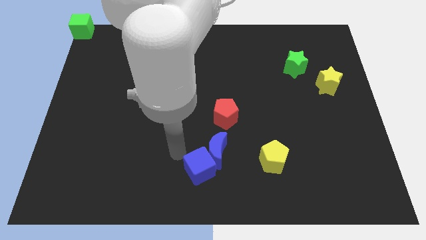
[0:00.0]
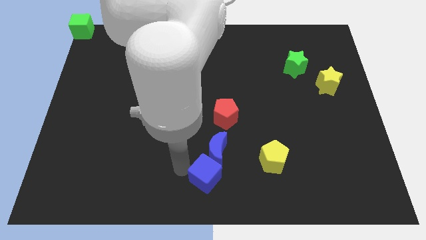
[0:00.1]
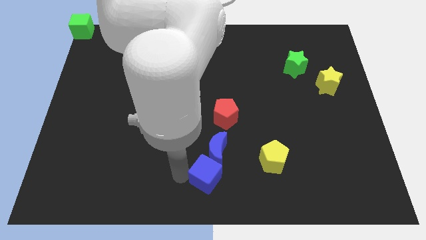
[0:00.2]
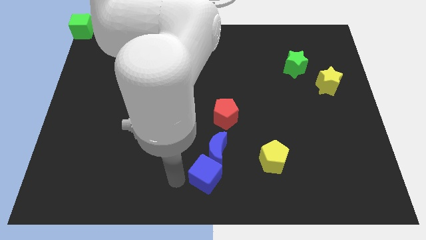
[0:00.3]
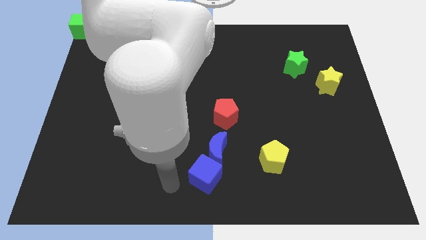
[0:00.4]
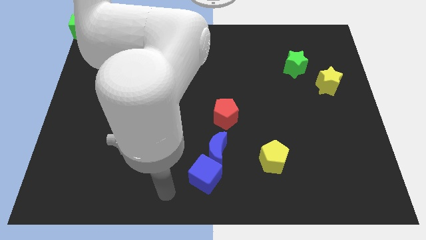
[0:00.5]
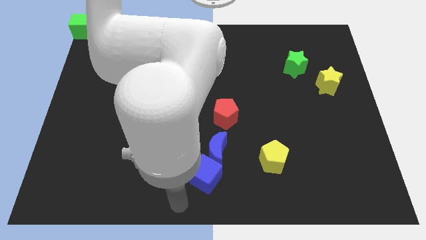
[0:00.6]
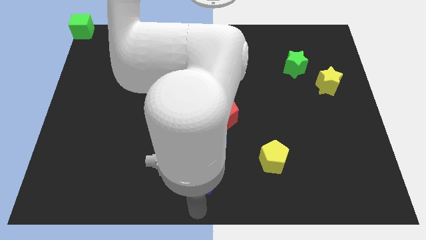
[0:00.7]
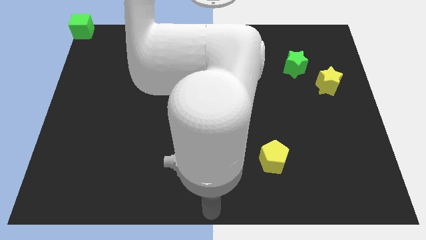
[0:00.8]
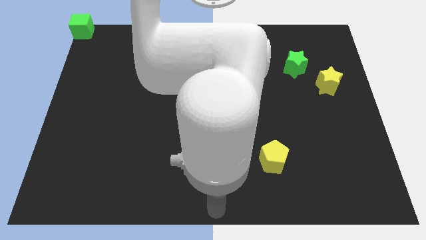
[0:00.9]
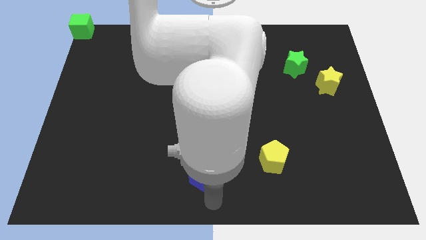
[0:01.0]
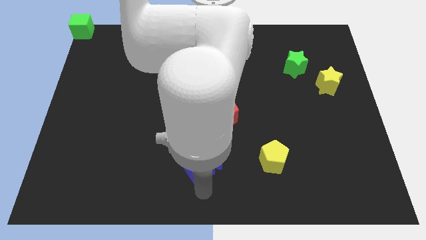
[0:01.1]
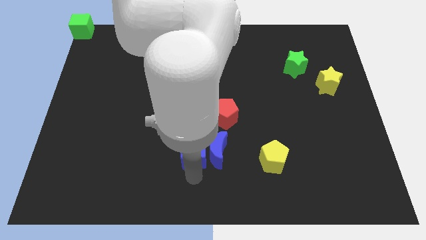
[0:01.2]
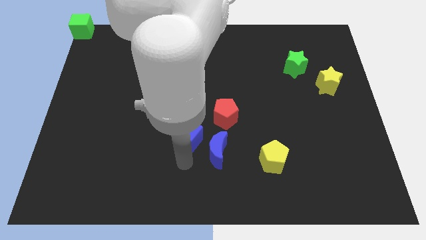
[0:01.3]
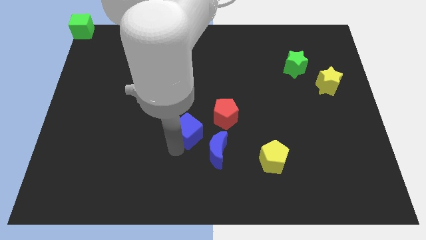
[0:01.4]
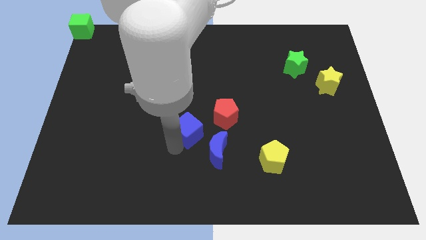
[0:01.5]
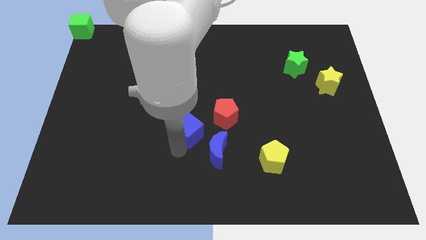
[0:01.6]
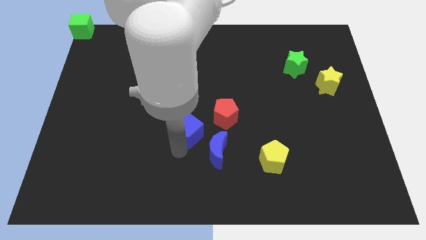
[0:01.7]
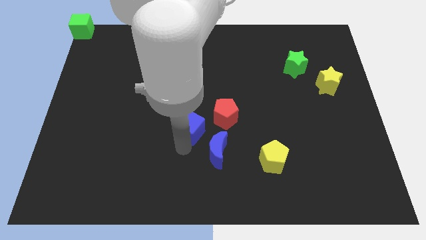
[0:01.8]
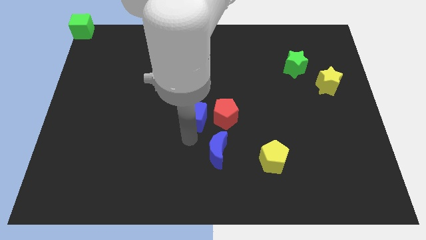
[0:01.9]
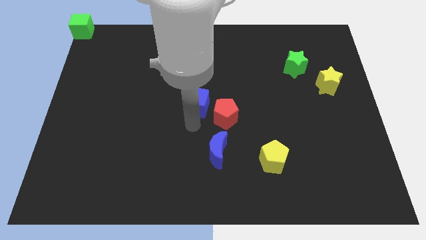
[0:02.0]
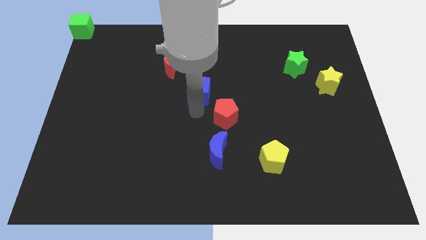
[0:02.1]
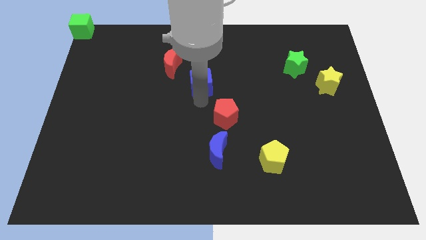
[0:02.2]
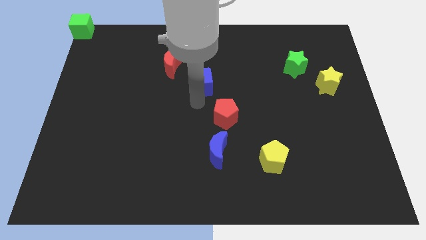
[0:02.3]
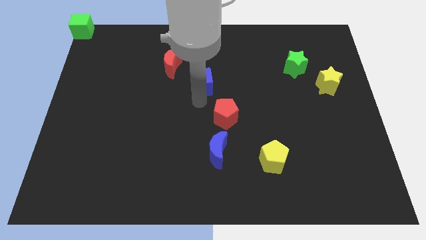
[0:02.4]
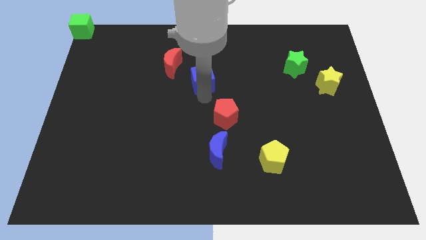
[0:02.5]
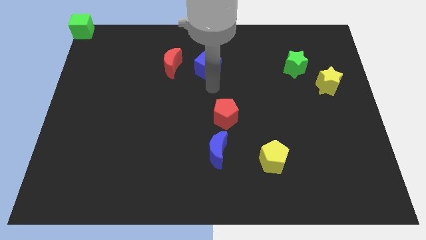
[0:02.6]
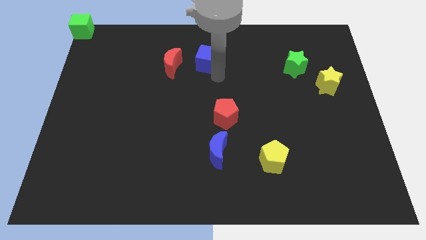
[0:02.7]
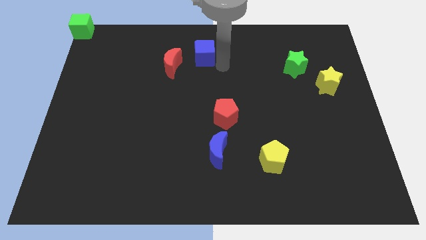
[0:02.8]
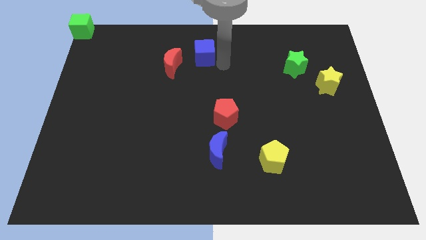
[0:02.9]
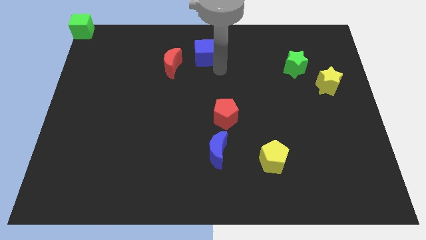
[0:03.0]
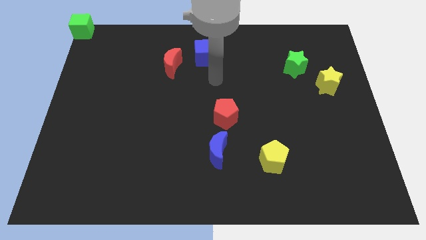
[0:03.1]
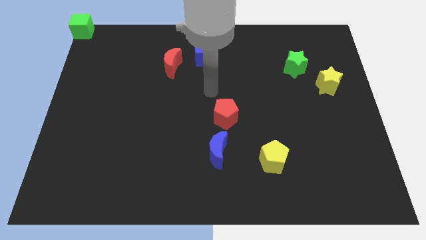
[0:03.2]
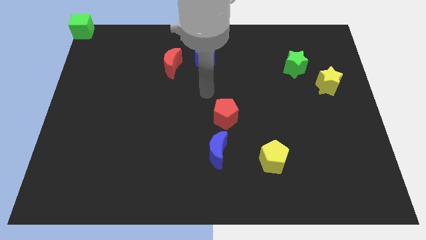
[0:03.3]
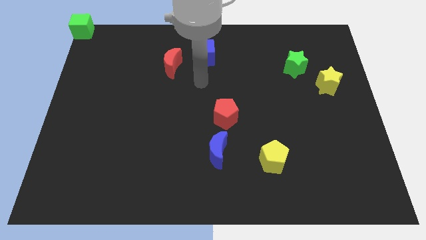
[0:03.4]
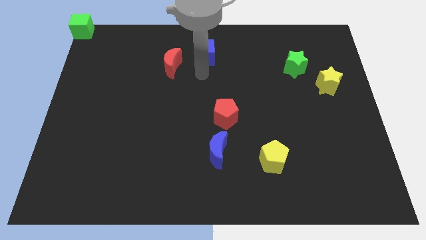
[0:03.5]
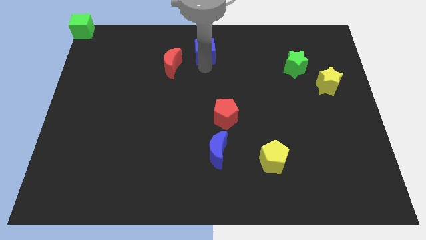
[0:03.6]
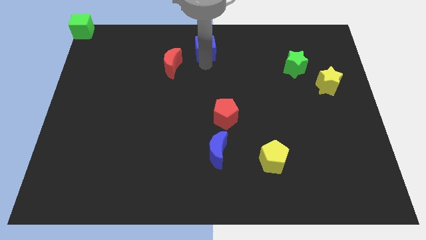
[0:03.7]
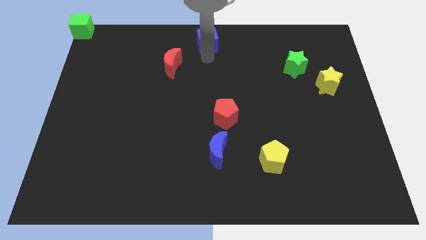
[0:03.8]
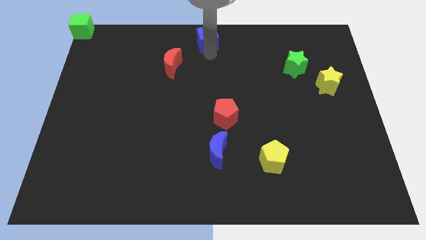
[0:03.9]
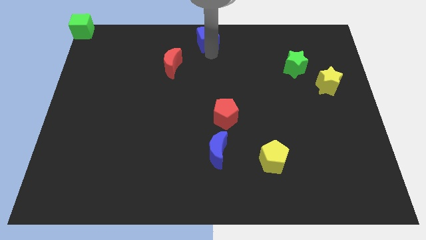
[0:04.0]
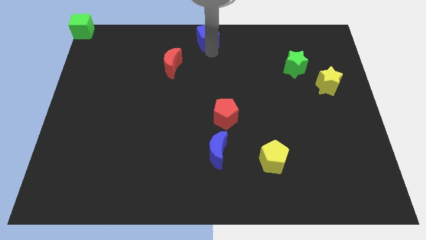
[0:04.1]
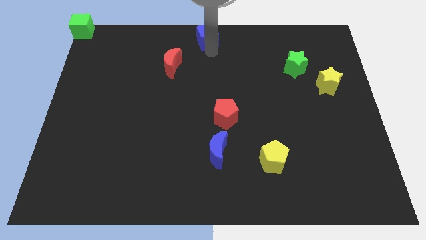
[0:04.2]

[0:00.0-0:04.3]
put the blue cube diagonally top right to the red moon

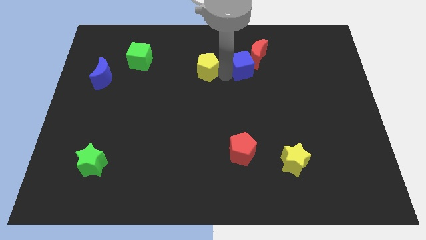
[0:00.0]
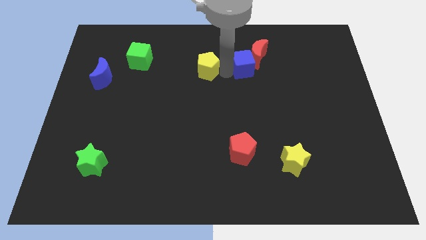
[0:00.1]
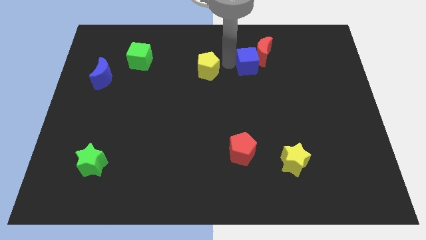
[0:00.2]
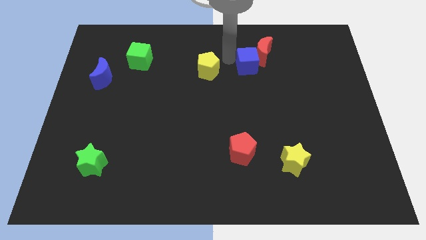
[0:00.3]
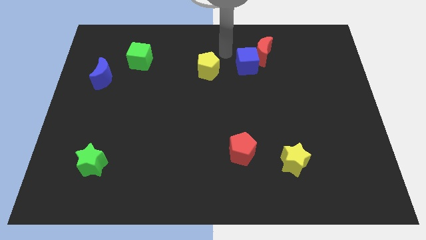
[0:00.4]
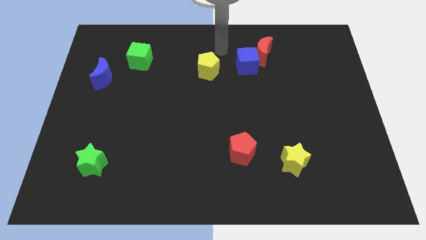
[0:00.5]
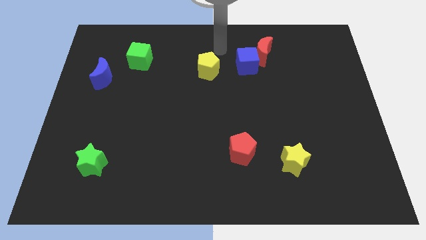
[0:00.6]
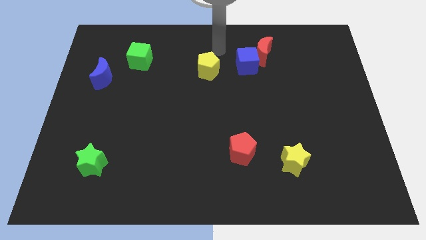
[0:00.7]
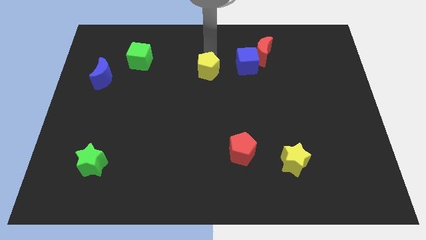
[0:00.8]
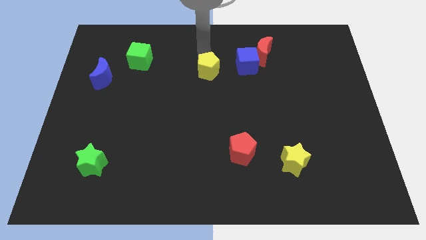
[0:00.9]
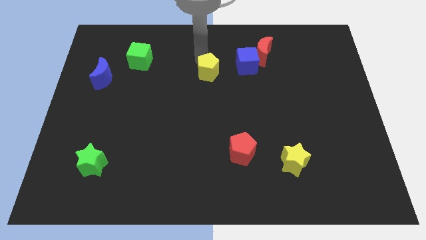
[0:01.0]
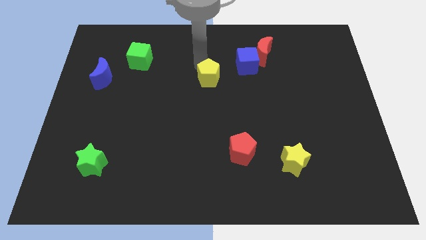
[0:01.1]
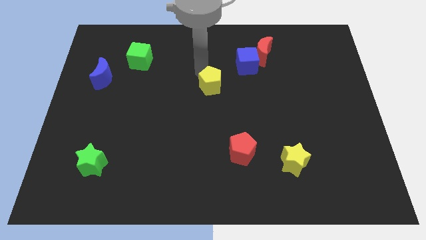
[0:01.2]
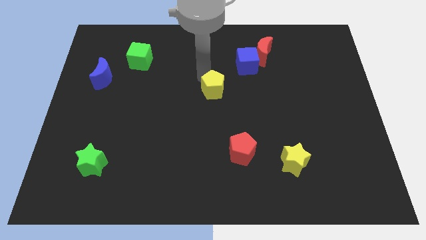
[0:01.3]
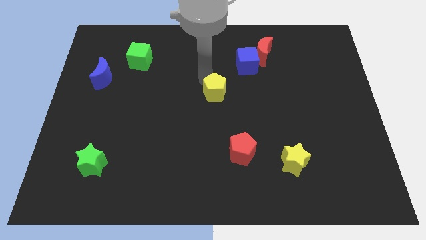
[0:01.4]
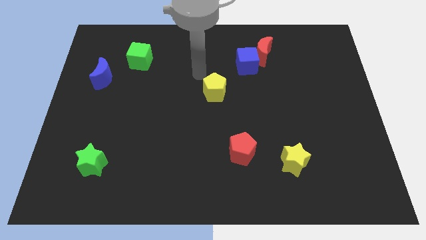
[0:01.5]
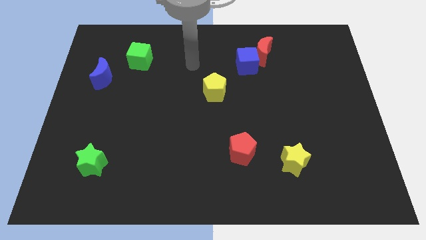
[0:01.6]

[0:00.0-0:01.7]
put the yellow pentagon to the bottom left of the blue cube

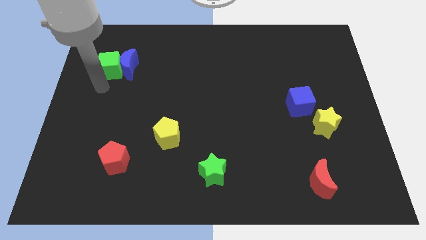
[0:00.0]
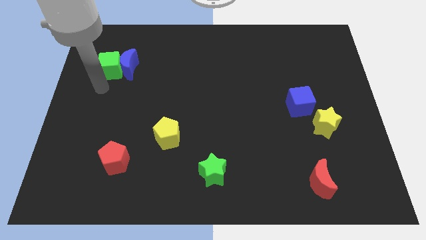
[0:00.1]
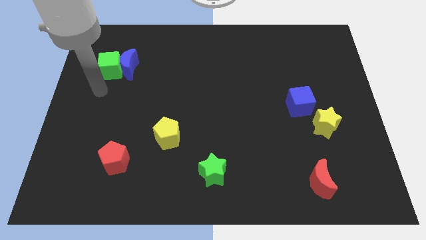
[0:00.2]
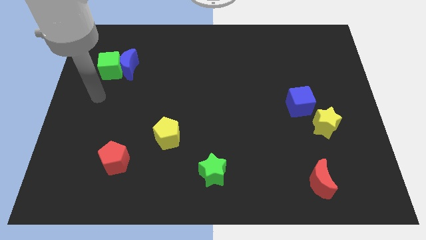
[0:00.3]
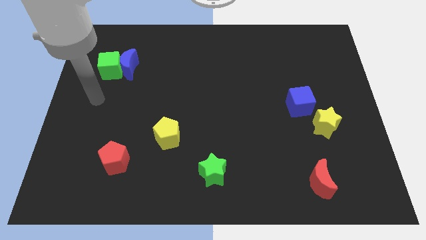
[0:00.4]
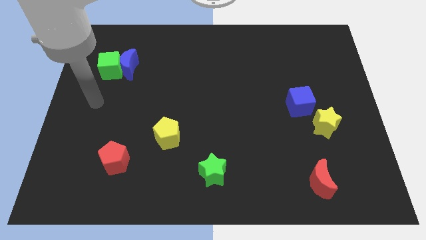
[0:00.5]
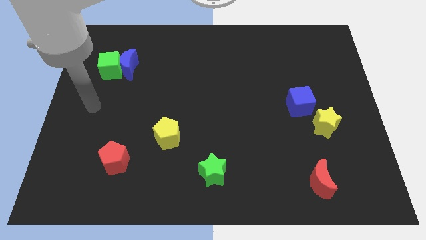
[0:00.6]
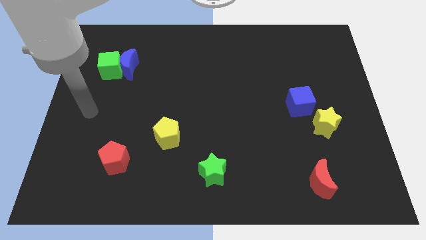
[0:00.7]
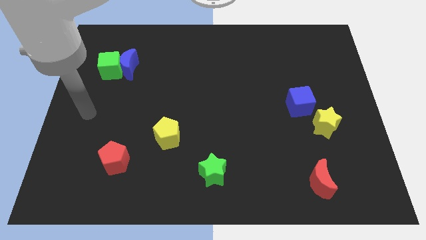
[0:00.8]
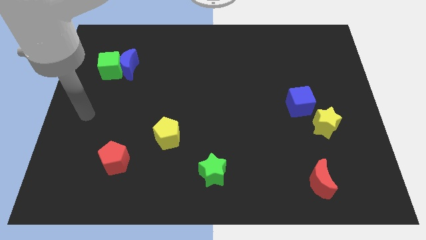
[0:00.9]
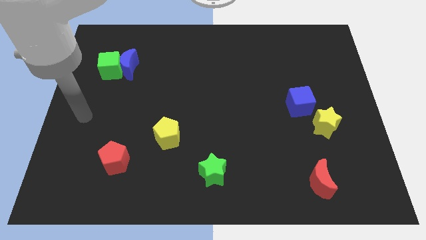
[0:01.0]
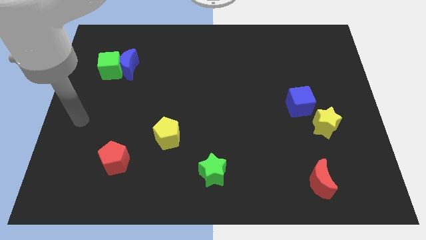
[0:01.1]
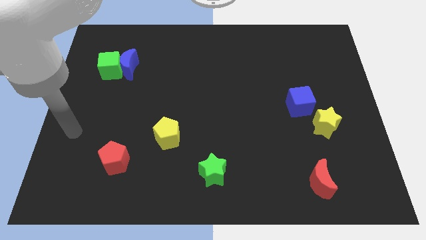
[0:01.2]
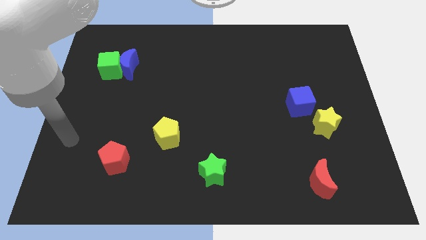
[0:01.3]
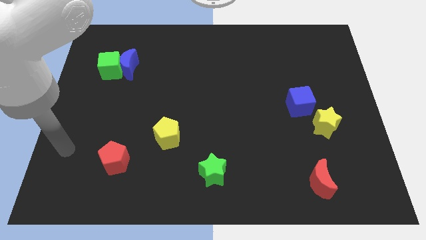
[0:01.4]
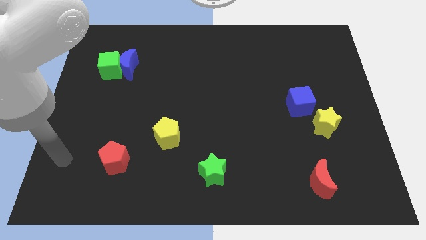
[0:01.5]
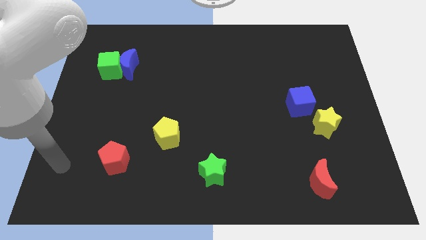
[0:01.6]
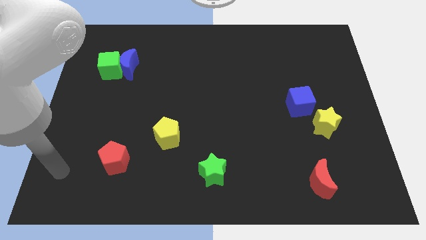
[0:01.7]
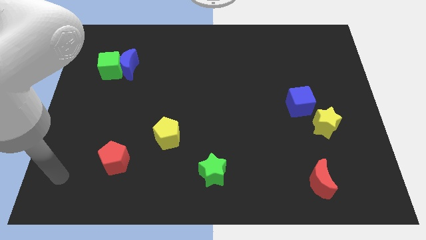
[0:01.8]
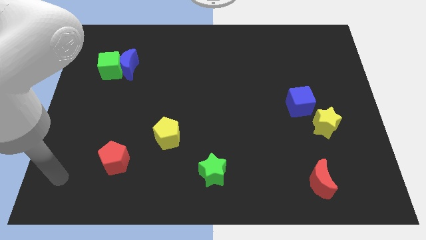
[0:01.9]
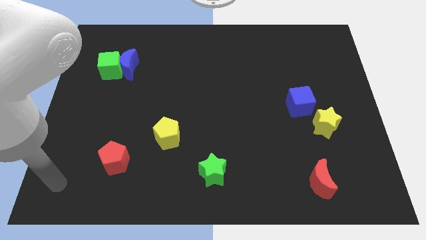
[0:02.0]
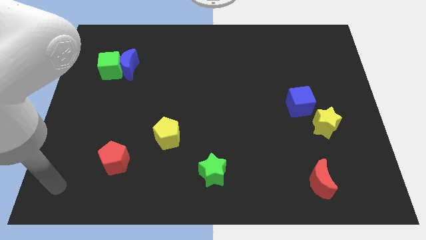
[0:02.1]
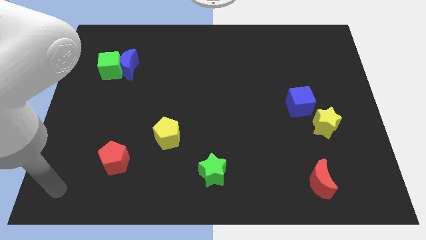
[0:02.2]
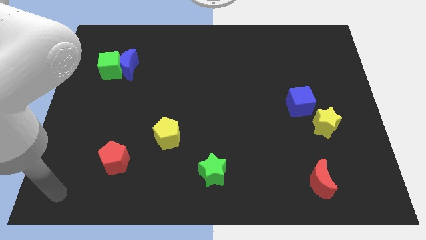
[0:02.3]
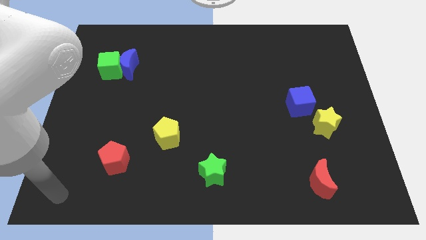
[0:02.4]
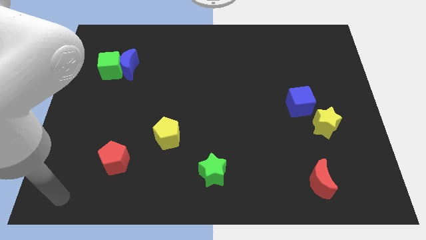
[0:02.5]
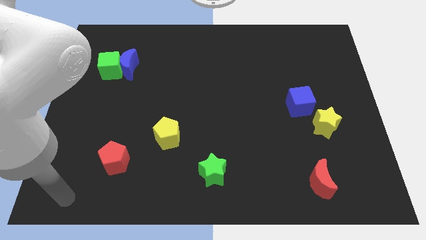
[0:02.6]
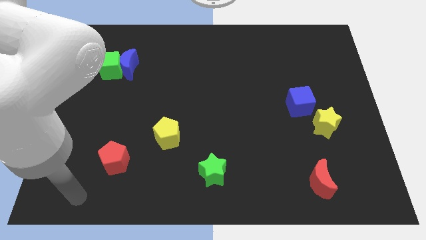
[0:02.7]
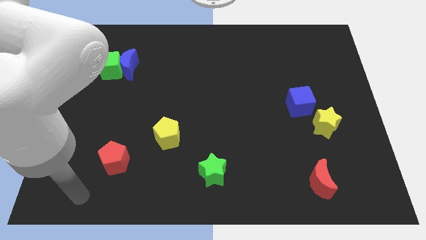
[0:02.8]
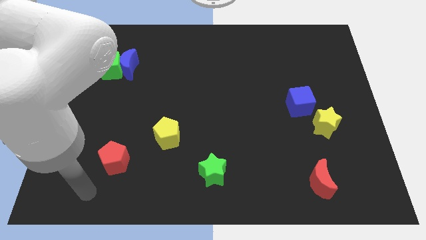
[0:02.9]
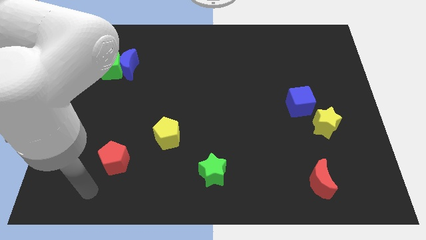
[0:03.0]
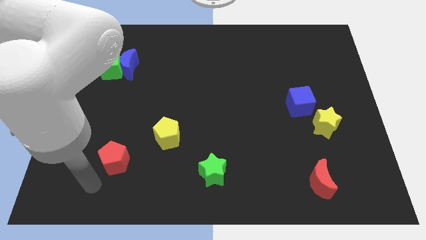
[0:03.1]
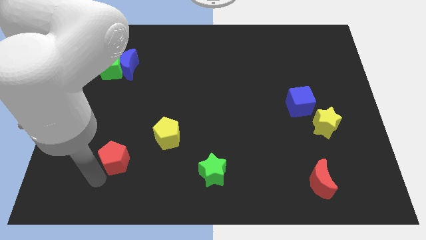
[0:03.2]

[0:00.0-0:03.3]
move your arm below the red pentagon
